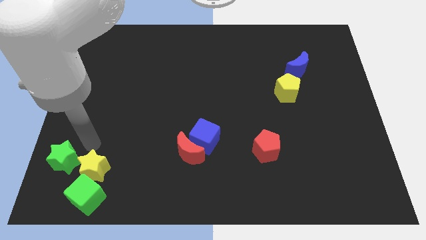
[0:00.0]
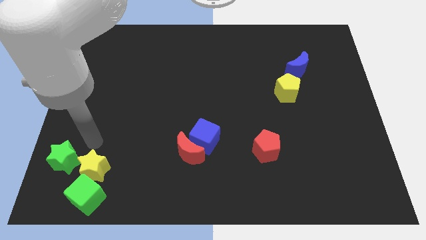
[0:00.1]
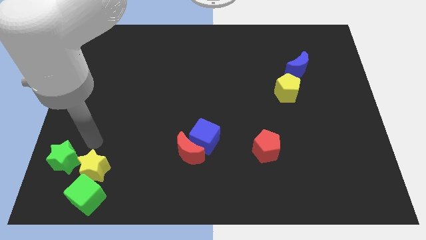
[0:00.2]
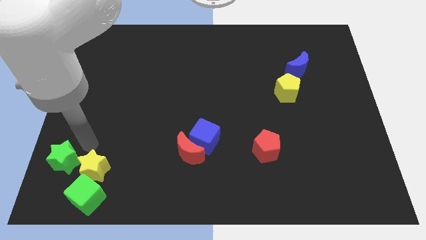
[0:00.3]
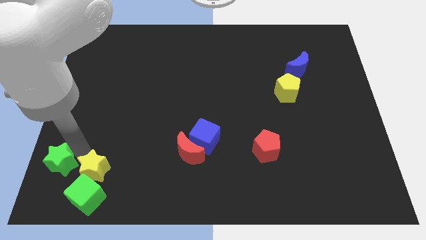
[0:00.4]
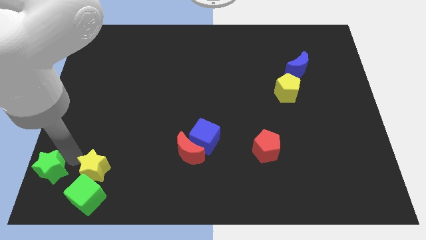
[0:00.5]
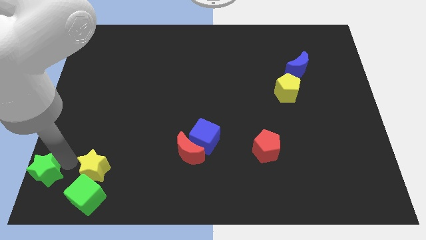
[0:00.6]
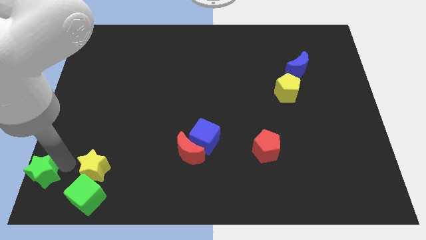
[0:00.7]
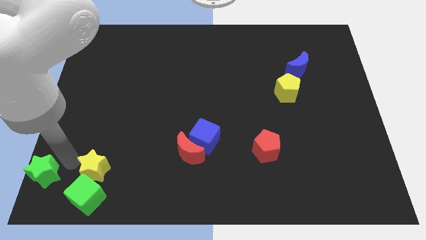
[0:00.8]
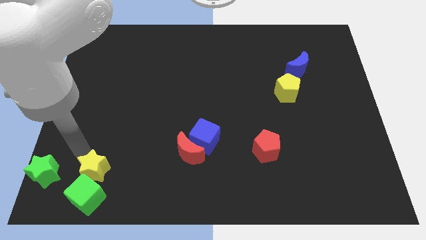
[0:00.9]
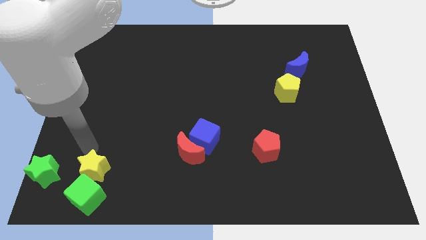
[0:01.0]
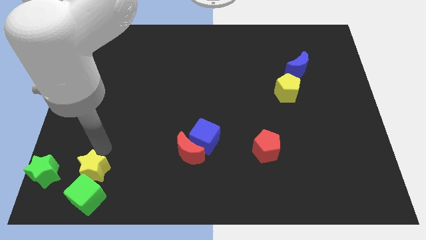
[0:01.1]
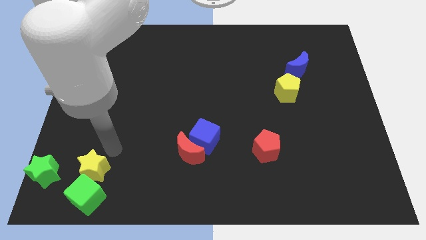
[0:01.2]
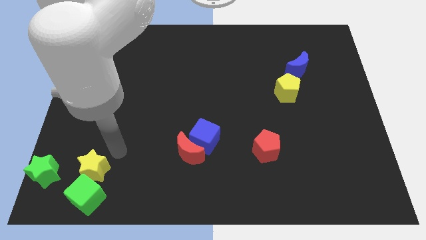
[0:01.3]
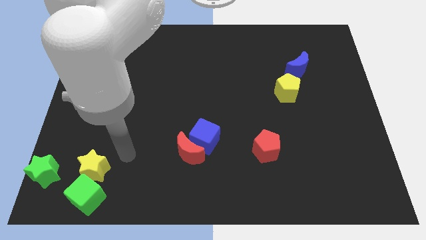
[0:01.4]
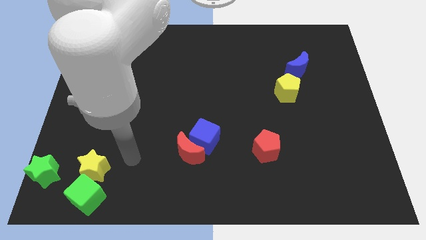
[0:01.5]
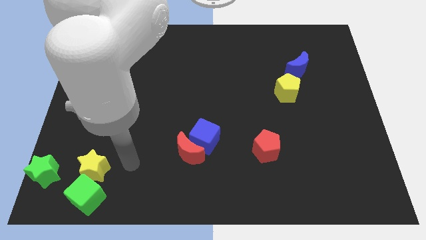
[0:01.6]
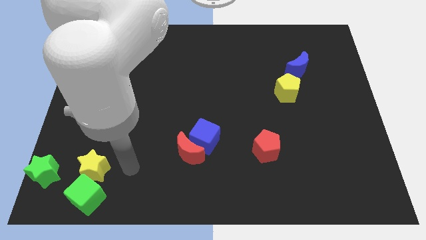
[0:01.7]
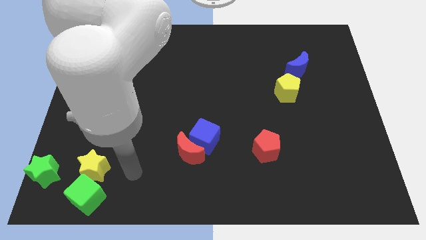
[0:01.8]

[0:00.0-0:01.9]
push the green star to the left corner

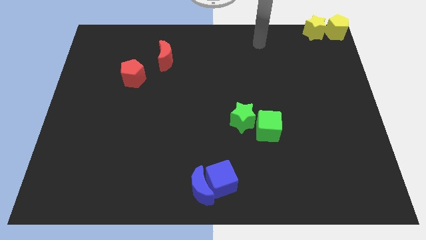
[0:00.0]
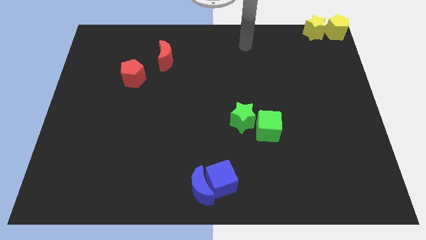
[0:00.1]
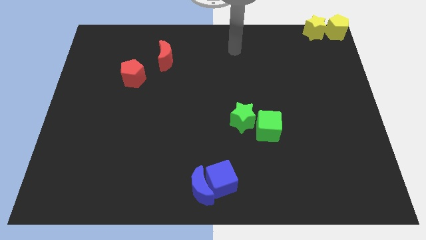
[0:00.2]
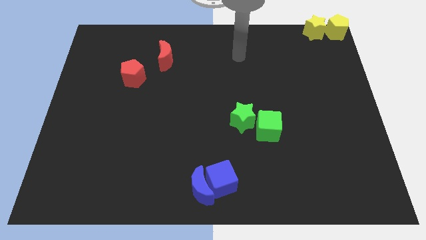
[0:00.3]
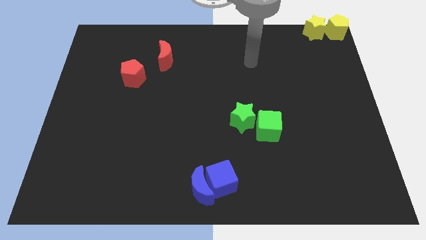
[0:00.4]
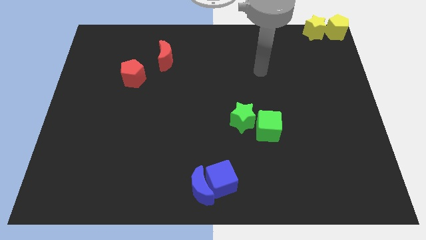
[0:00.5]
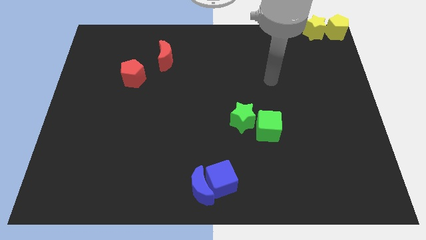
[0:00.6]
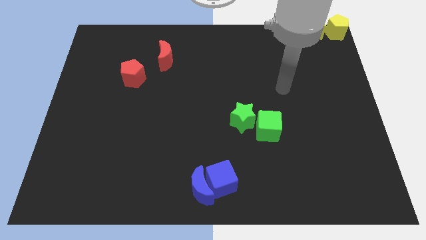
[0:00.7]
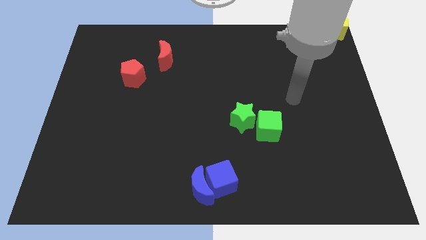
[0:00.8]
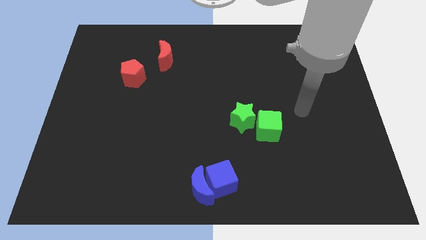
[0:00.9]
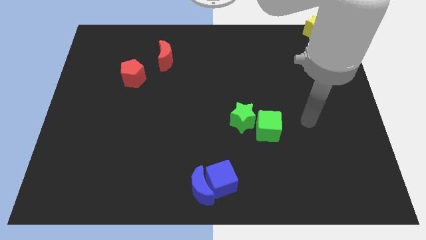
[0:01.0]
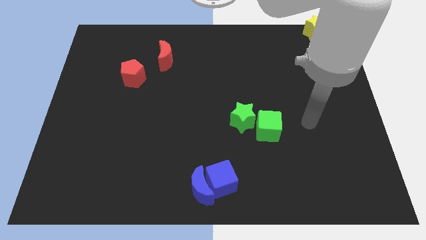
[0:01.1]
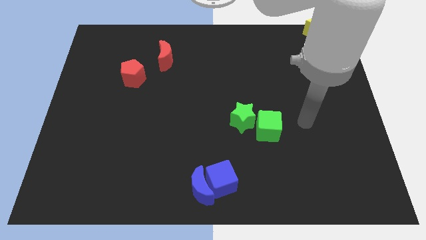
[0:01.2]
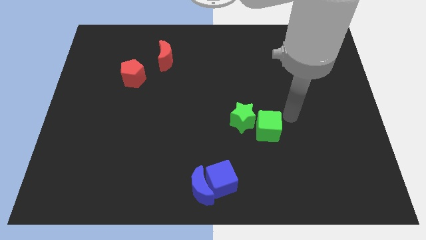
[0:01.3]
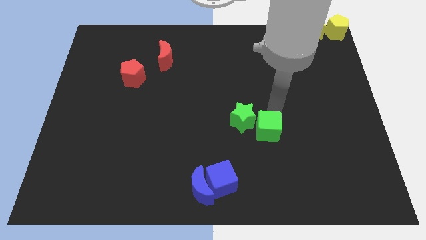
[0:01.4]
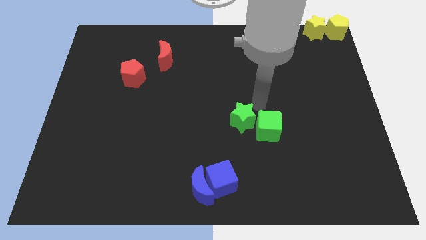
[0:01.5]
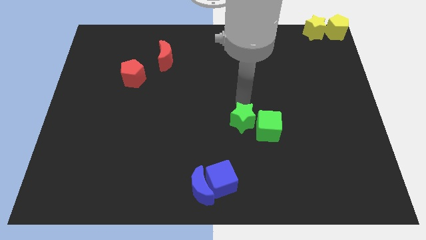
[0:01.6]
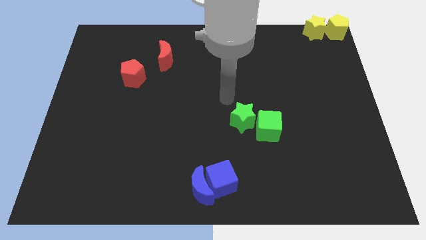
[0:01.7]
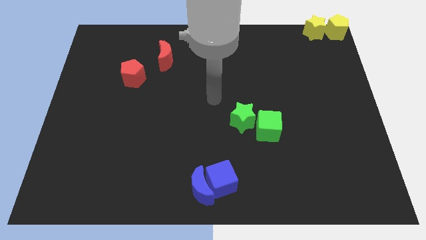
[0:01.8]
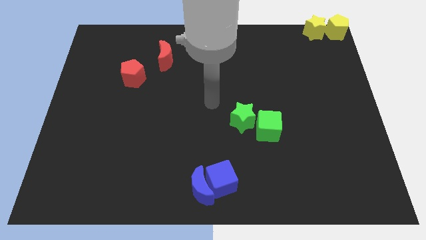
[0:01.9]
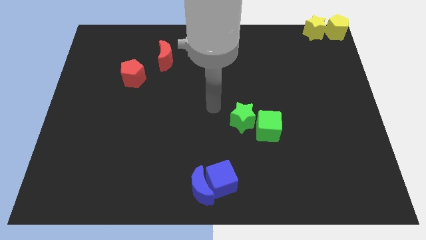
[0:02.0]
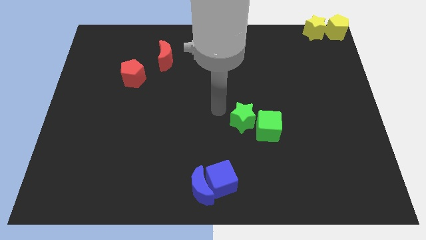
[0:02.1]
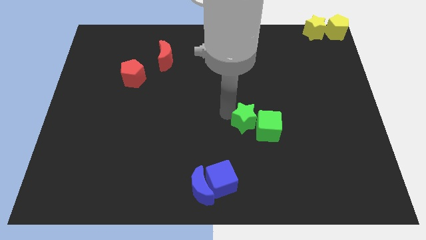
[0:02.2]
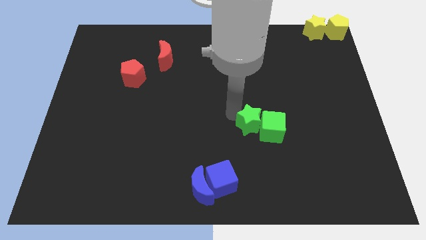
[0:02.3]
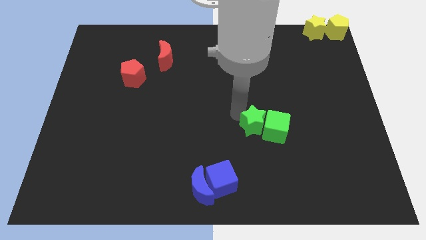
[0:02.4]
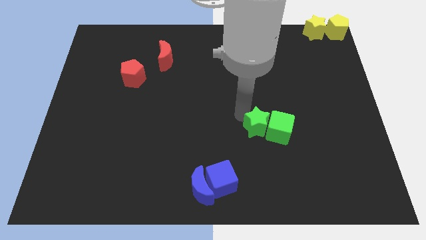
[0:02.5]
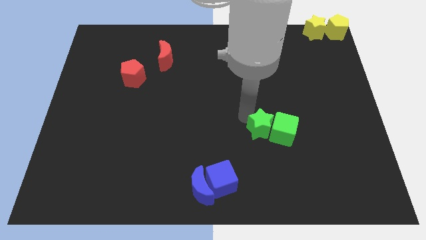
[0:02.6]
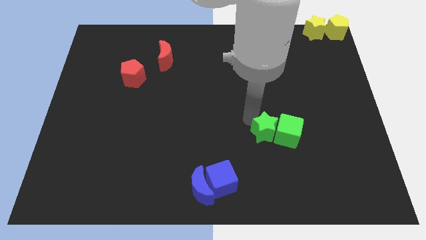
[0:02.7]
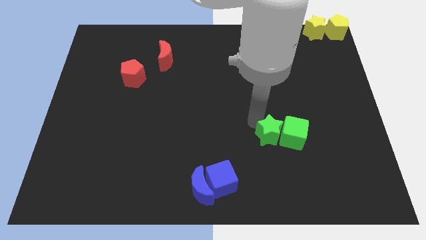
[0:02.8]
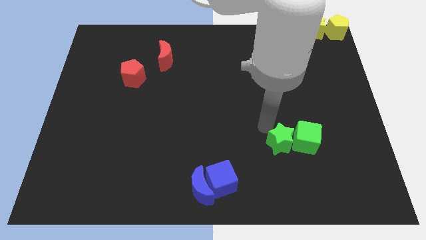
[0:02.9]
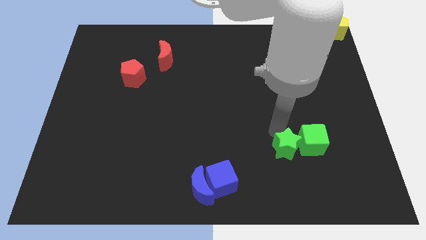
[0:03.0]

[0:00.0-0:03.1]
push the green star into the green cube

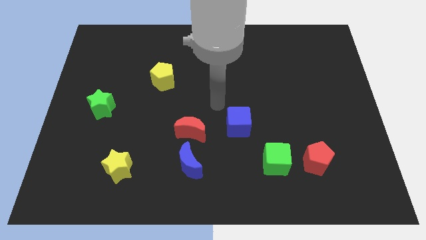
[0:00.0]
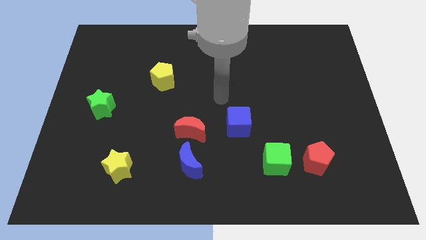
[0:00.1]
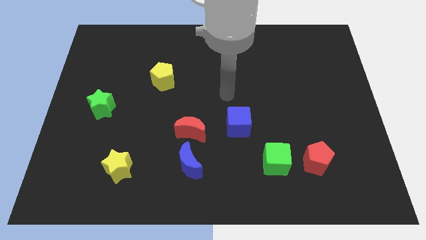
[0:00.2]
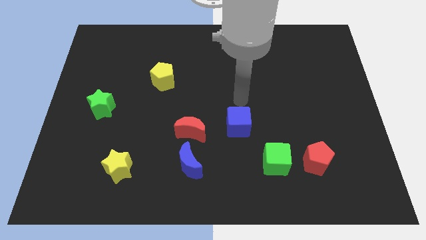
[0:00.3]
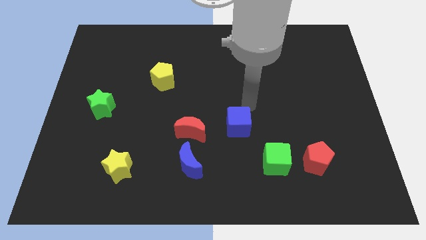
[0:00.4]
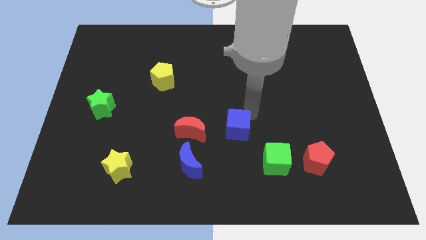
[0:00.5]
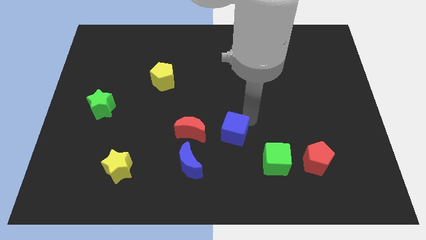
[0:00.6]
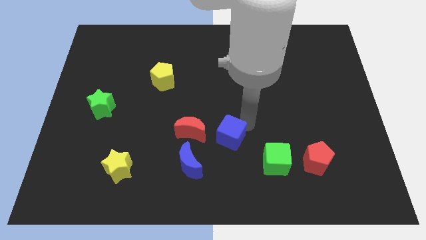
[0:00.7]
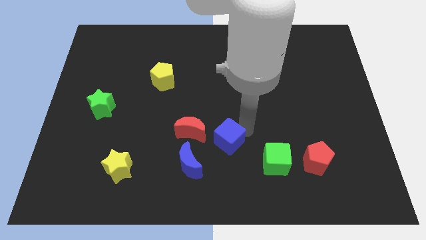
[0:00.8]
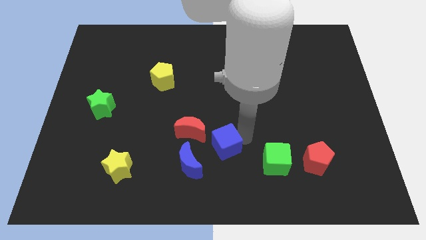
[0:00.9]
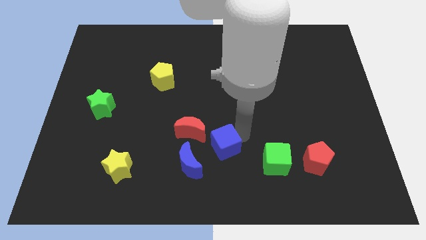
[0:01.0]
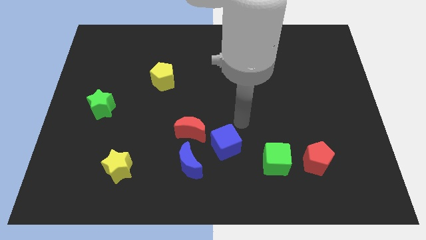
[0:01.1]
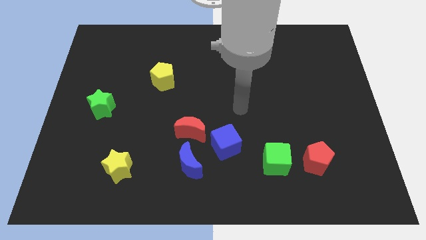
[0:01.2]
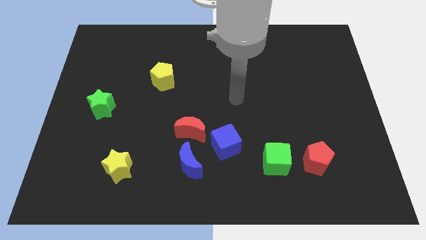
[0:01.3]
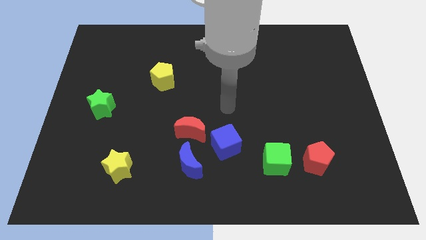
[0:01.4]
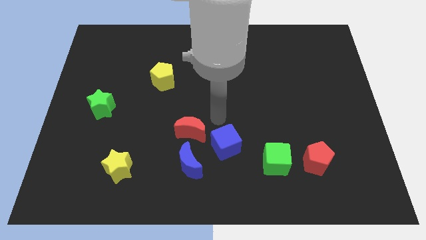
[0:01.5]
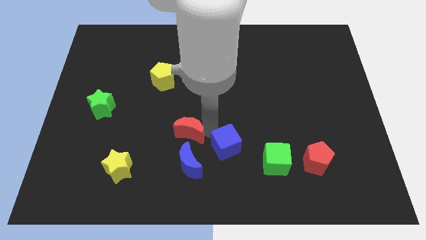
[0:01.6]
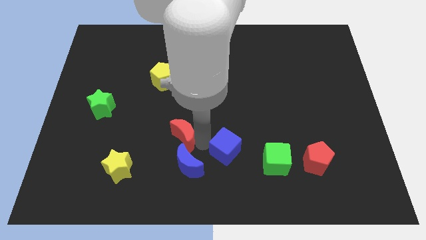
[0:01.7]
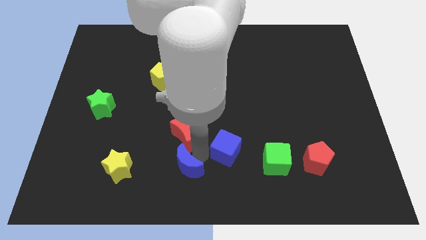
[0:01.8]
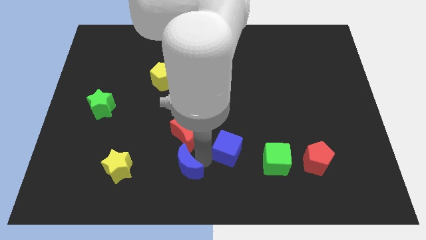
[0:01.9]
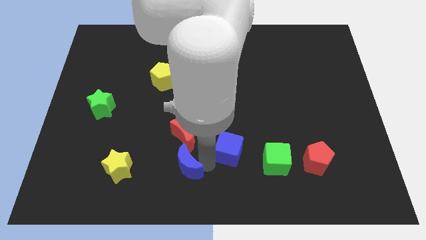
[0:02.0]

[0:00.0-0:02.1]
push the blue cube to the left of the green cube

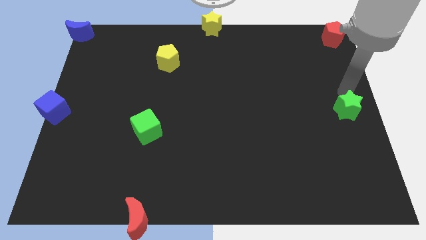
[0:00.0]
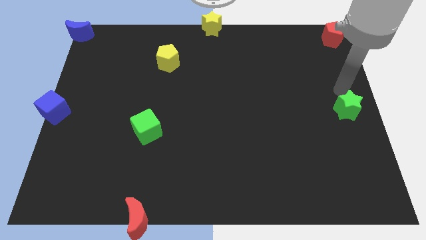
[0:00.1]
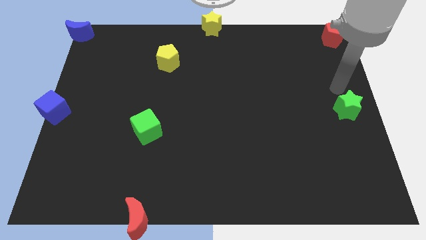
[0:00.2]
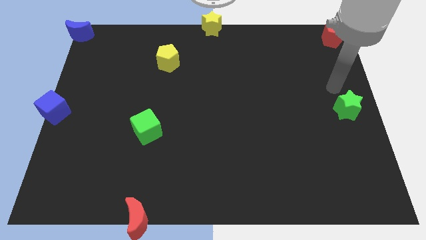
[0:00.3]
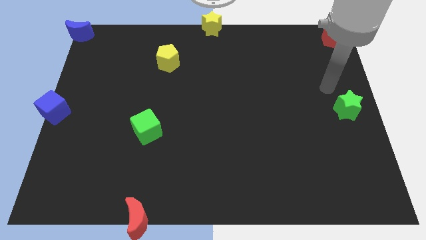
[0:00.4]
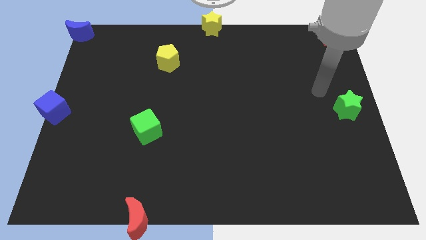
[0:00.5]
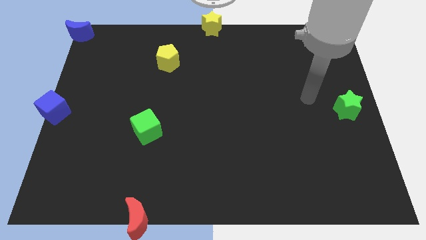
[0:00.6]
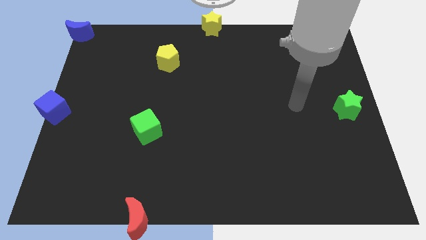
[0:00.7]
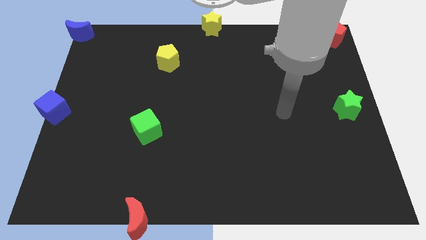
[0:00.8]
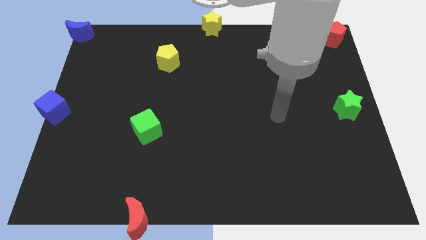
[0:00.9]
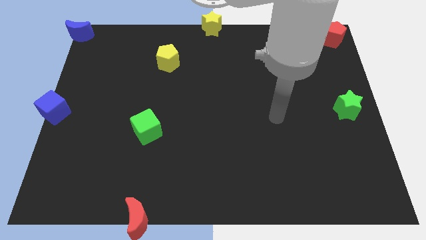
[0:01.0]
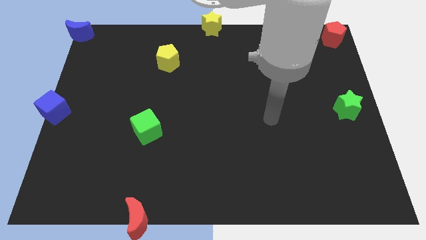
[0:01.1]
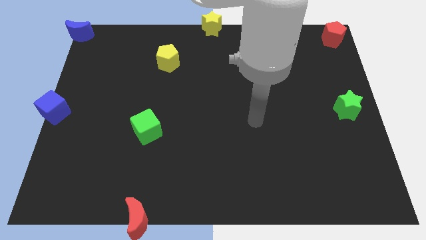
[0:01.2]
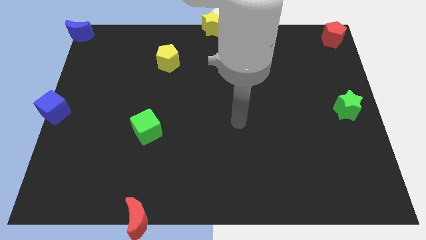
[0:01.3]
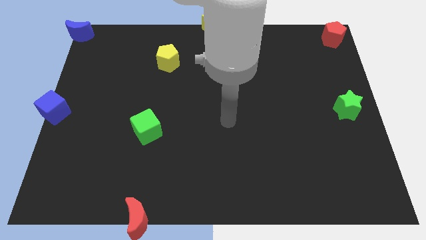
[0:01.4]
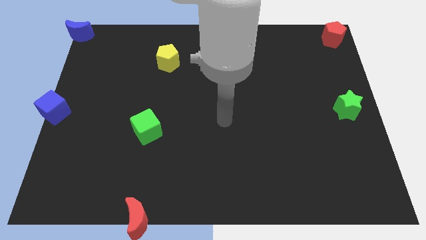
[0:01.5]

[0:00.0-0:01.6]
move your arm away from green star

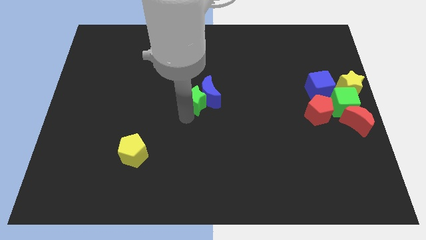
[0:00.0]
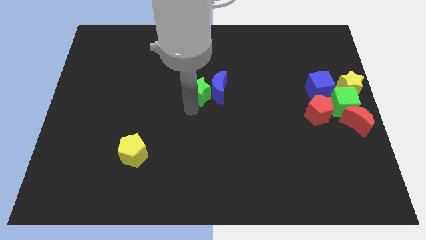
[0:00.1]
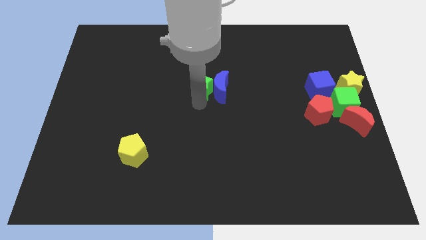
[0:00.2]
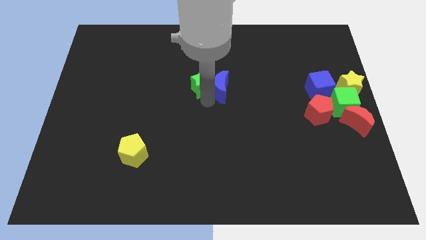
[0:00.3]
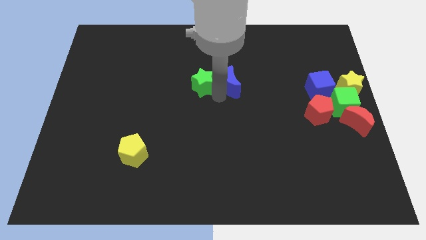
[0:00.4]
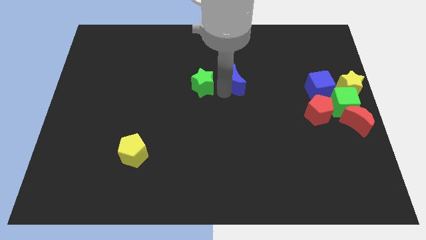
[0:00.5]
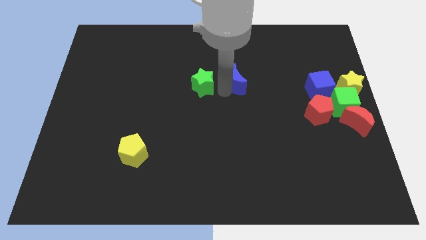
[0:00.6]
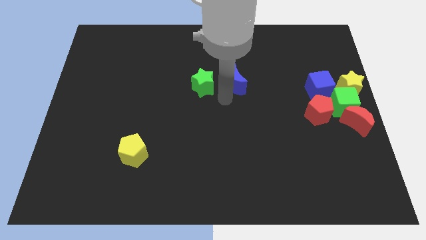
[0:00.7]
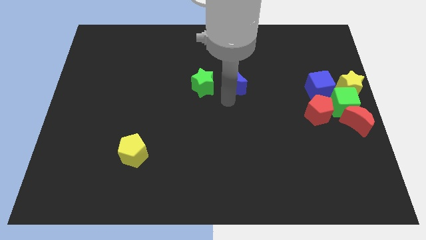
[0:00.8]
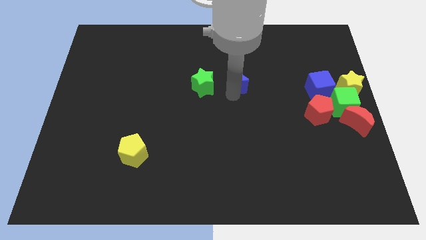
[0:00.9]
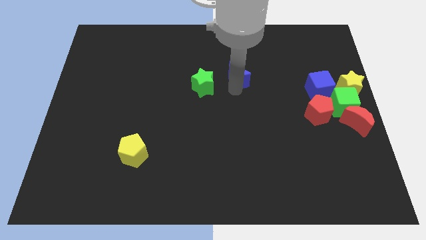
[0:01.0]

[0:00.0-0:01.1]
separate the green star and blue moon
